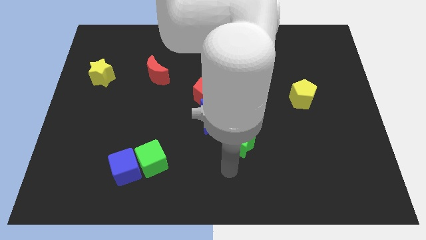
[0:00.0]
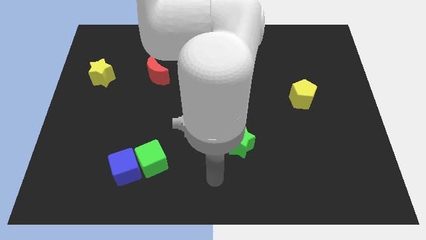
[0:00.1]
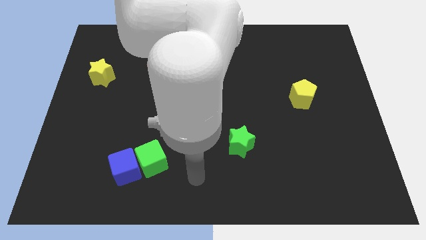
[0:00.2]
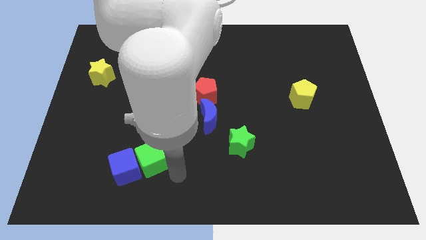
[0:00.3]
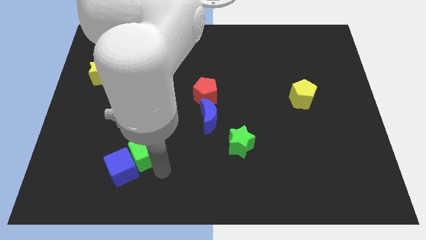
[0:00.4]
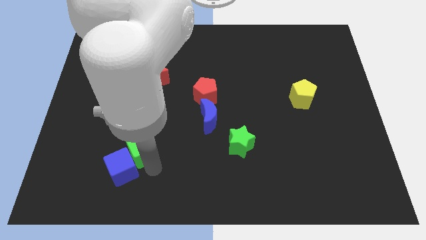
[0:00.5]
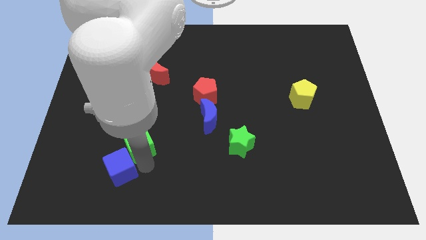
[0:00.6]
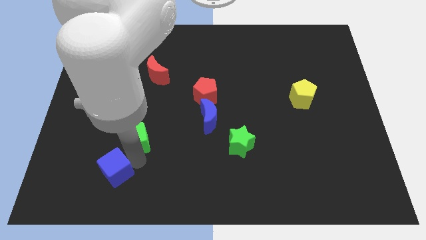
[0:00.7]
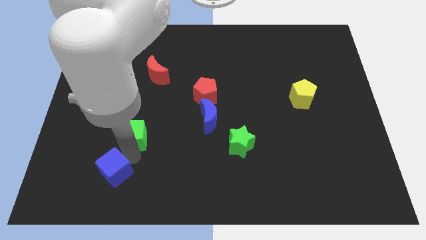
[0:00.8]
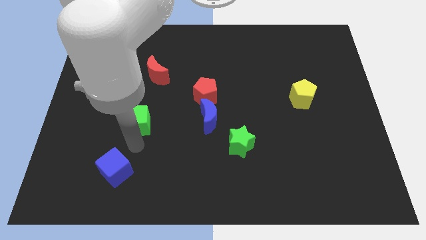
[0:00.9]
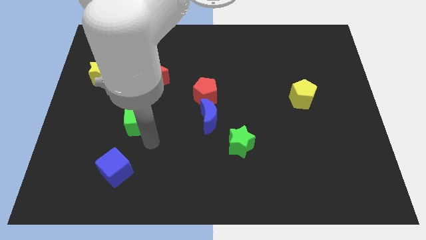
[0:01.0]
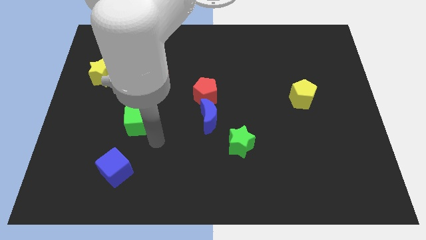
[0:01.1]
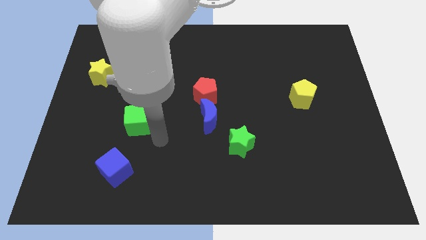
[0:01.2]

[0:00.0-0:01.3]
push the green cube to the top of the blue cube

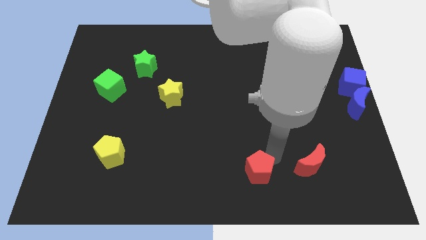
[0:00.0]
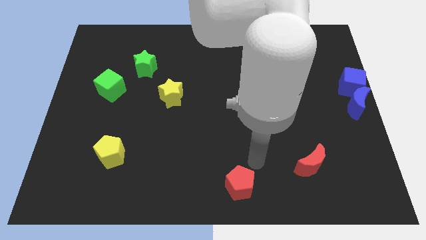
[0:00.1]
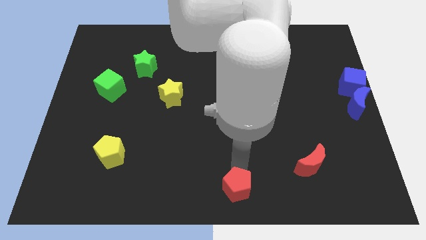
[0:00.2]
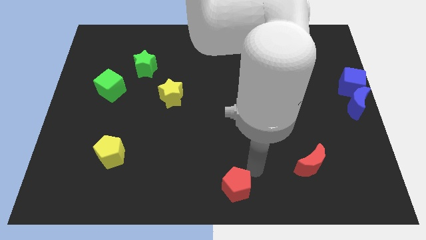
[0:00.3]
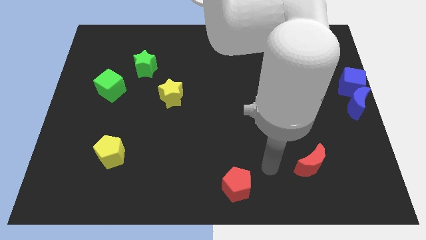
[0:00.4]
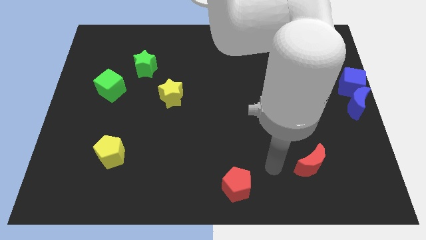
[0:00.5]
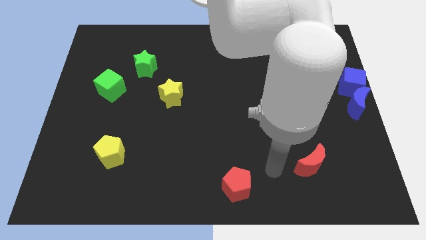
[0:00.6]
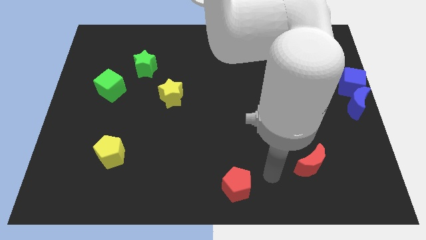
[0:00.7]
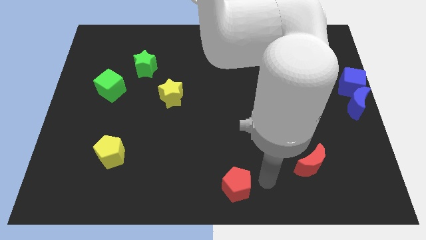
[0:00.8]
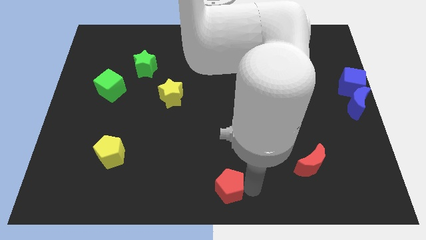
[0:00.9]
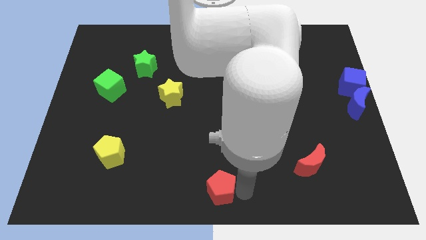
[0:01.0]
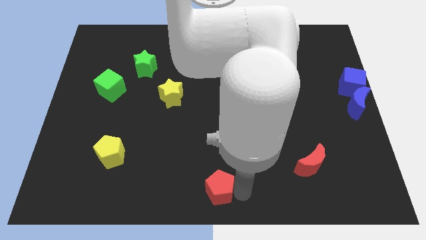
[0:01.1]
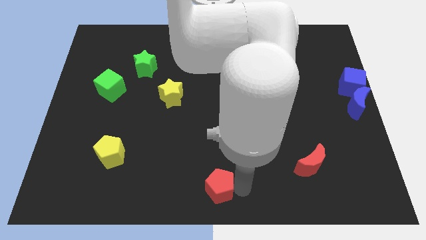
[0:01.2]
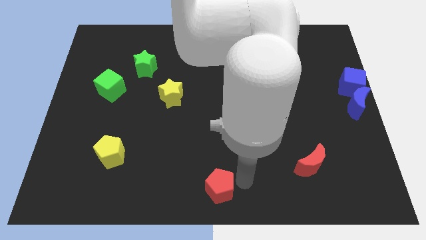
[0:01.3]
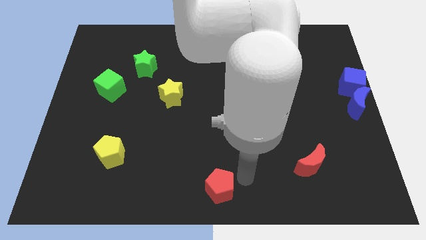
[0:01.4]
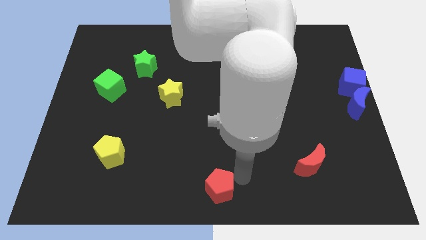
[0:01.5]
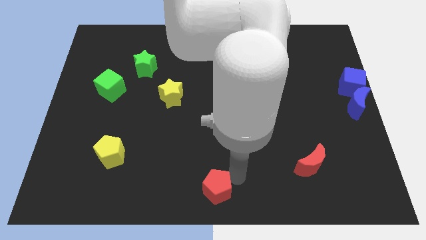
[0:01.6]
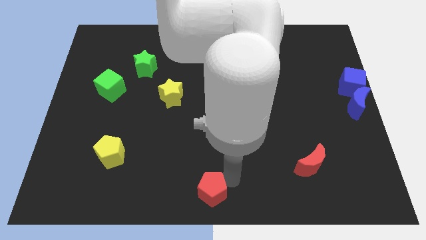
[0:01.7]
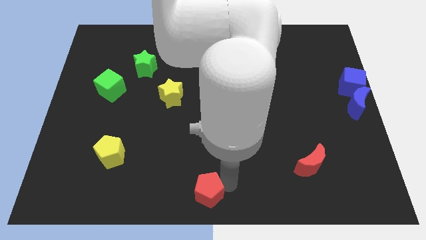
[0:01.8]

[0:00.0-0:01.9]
place the red pentagon towards the bottom center

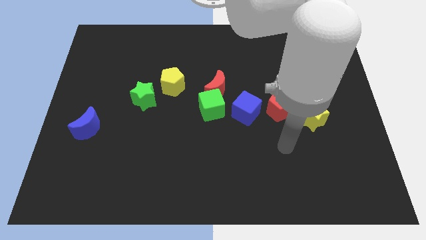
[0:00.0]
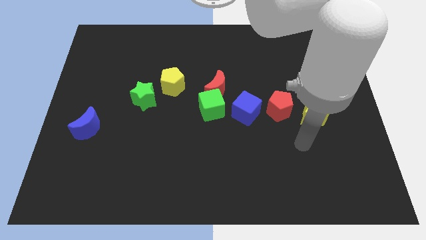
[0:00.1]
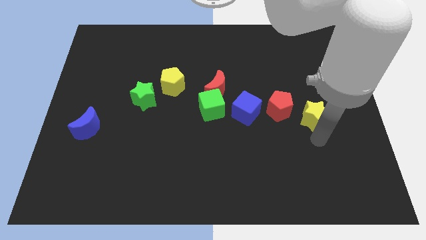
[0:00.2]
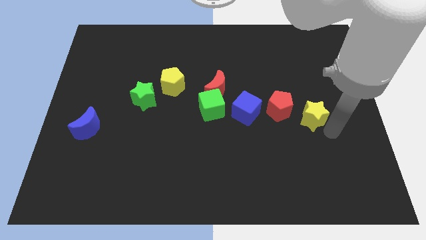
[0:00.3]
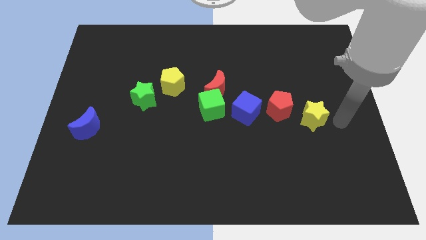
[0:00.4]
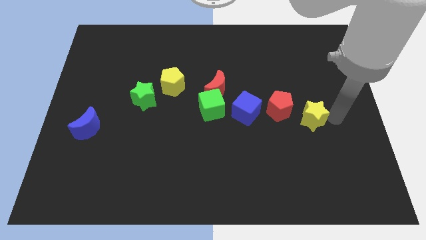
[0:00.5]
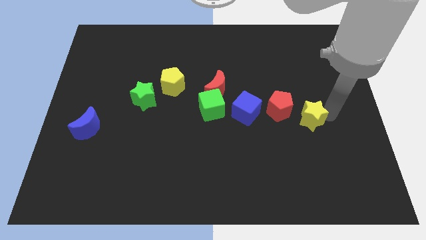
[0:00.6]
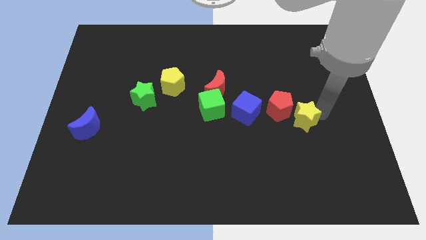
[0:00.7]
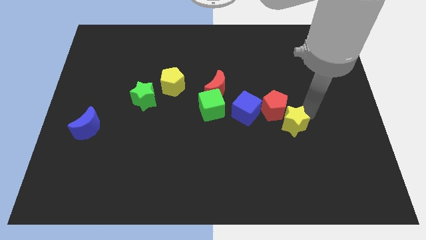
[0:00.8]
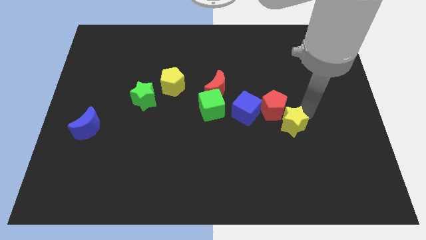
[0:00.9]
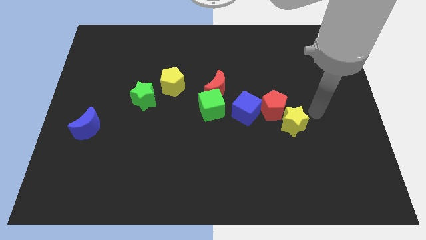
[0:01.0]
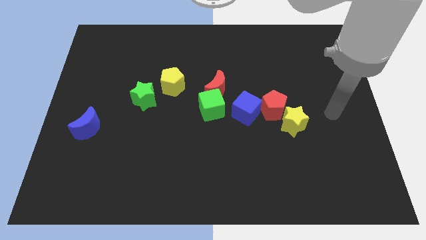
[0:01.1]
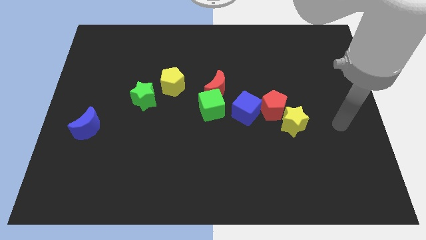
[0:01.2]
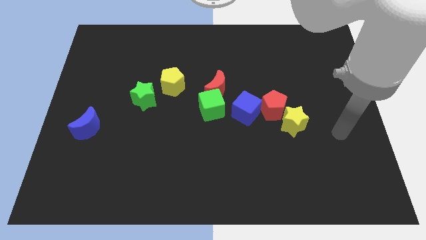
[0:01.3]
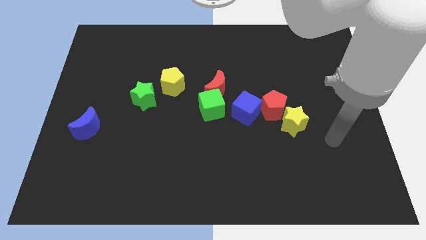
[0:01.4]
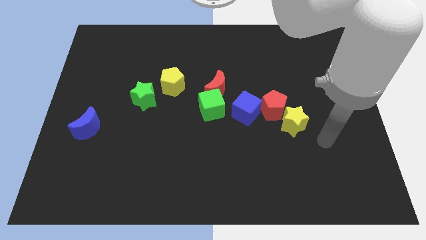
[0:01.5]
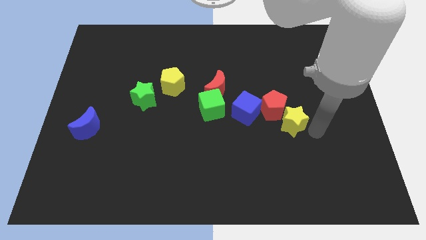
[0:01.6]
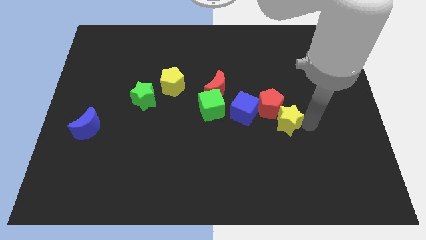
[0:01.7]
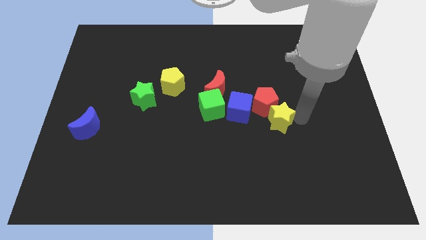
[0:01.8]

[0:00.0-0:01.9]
move the yellow star towards the bottom right of the red pentagon

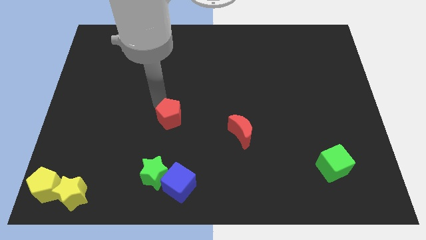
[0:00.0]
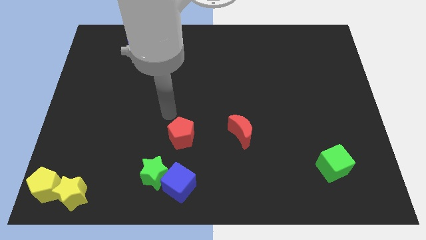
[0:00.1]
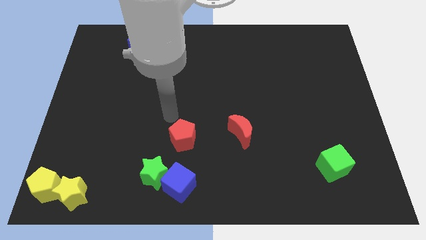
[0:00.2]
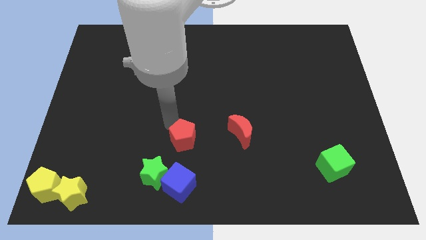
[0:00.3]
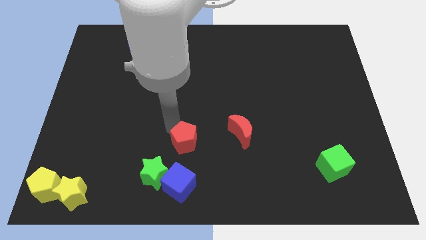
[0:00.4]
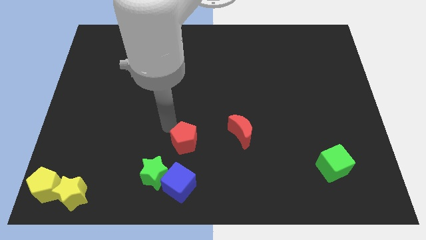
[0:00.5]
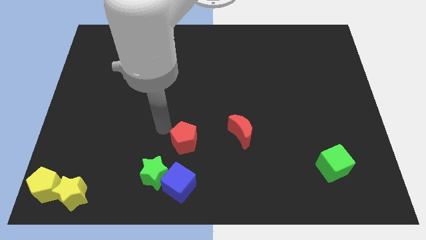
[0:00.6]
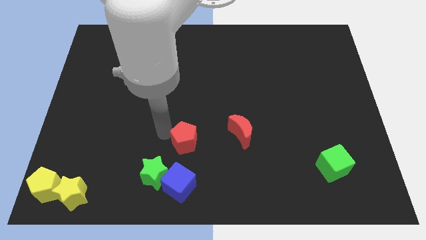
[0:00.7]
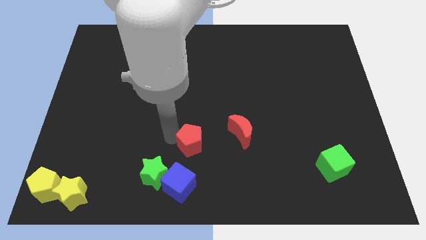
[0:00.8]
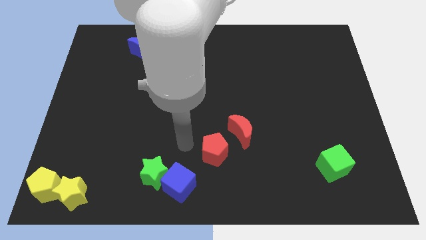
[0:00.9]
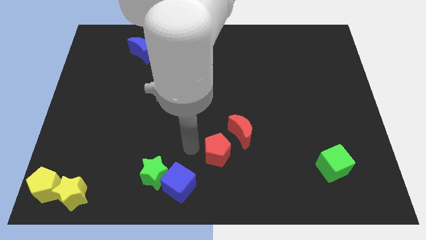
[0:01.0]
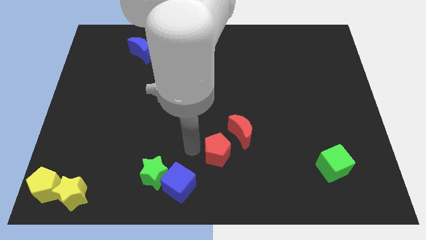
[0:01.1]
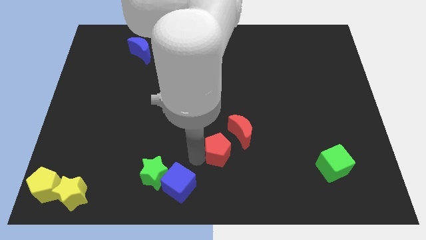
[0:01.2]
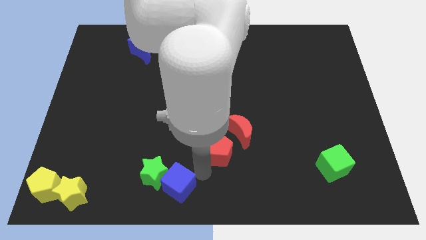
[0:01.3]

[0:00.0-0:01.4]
move the red pentagon close to the red moon

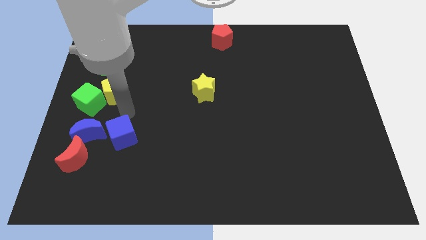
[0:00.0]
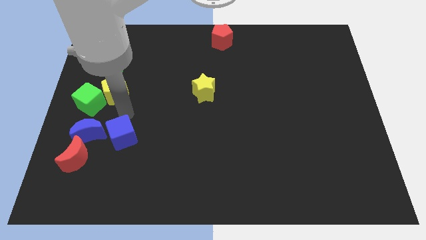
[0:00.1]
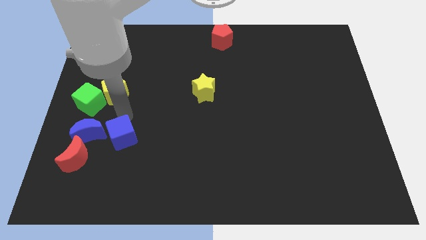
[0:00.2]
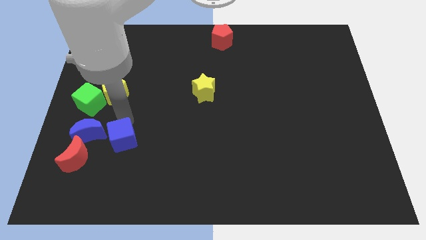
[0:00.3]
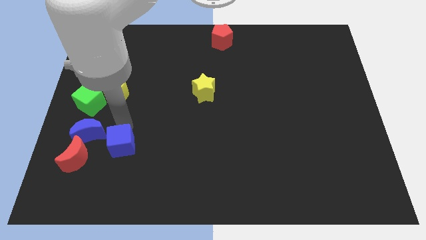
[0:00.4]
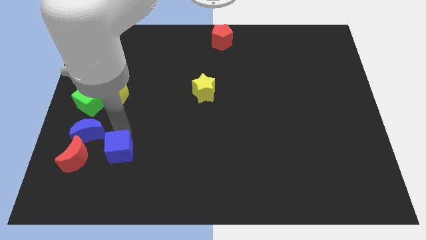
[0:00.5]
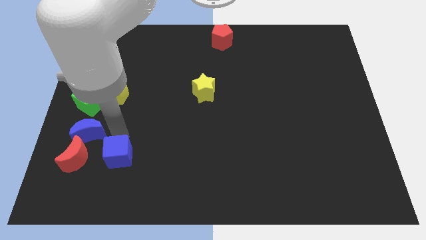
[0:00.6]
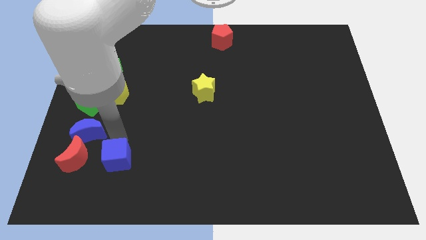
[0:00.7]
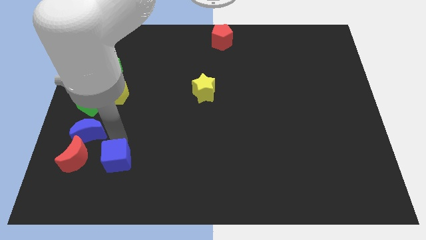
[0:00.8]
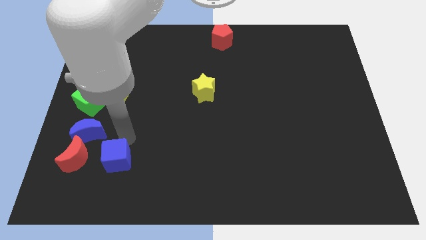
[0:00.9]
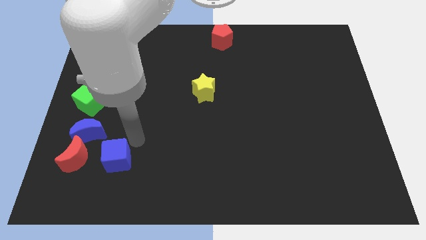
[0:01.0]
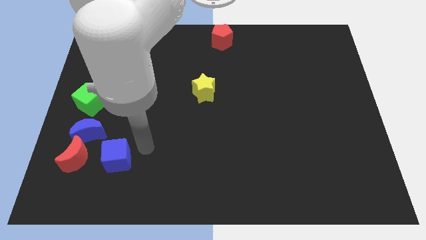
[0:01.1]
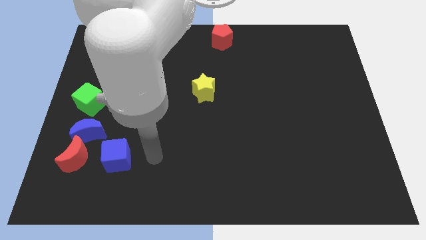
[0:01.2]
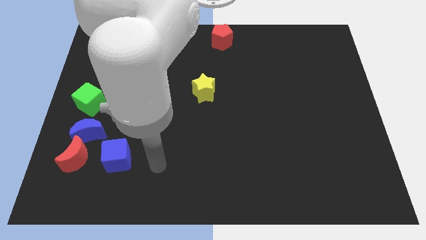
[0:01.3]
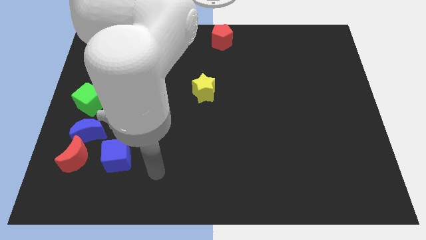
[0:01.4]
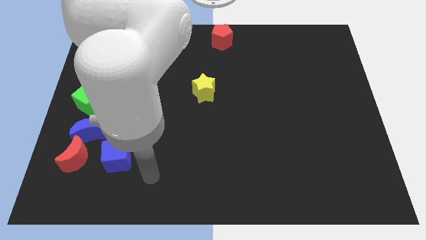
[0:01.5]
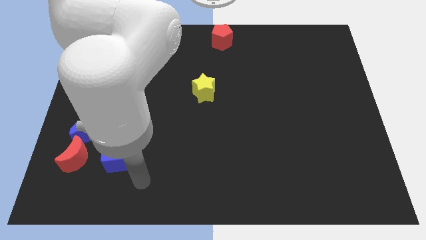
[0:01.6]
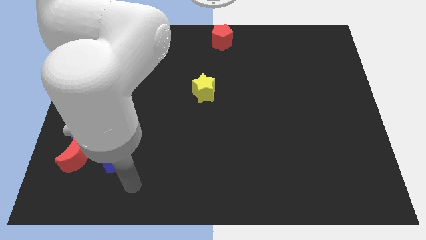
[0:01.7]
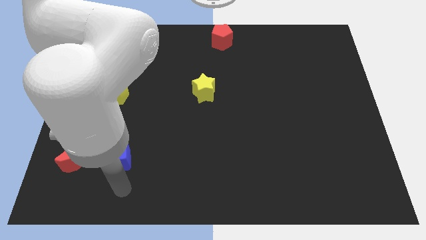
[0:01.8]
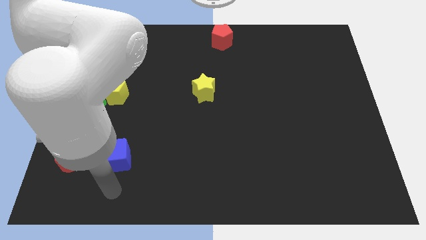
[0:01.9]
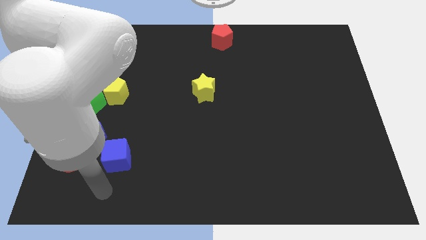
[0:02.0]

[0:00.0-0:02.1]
place the blue cube to the right of the red crescent

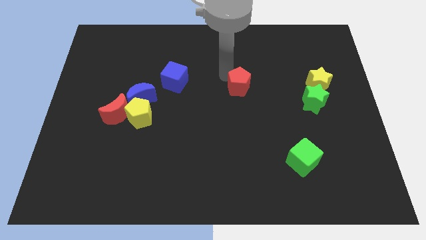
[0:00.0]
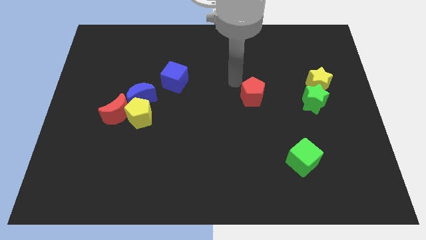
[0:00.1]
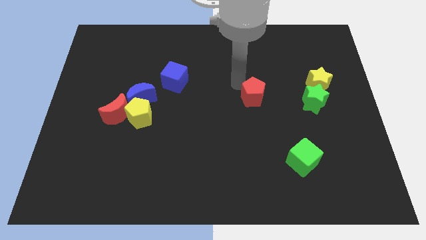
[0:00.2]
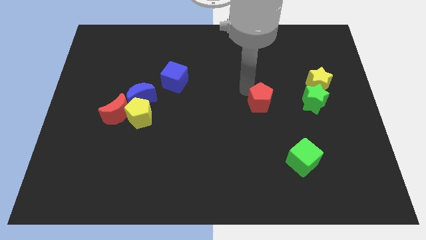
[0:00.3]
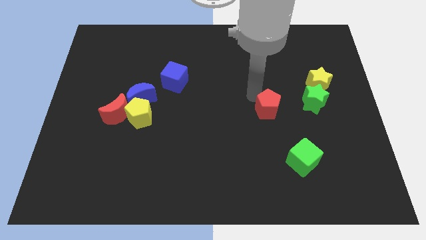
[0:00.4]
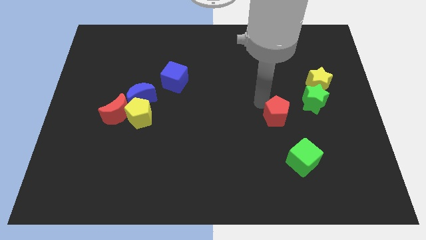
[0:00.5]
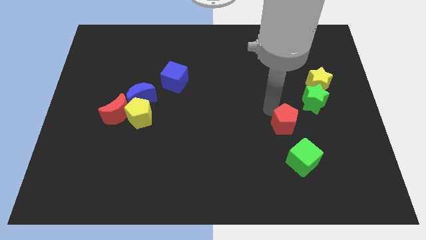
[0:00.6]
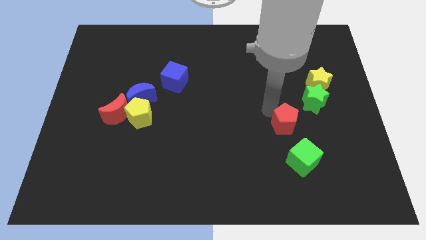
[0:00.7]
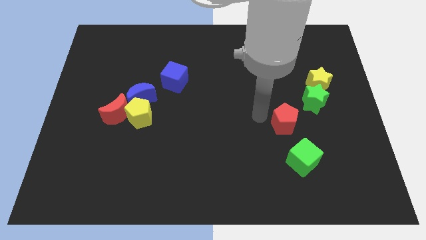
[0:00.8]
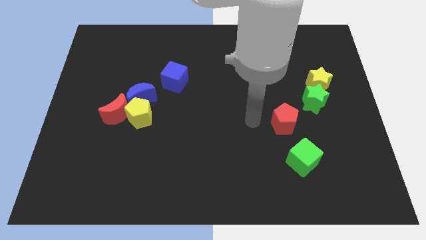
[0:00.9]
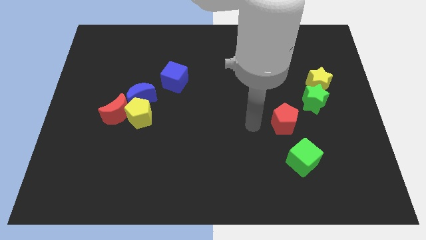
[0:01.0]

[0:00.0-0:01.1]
push red pentagon diagonally towards green cube
